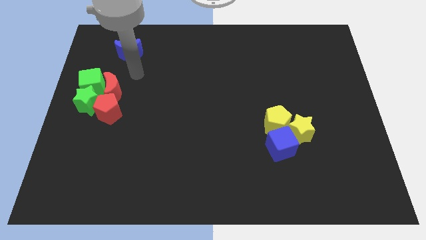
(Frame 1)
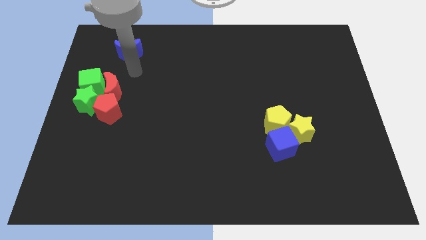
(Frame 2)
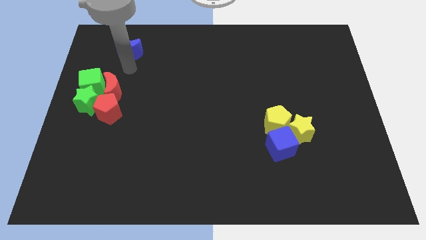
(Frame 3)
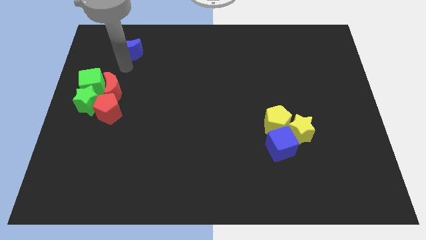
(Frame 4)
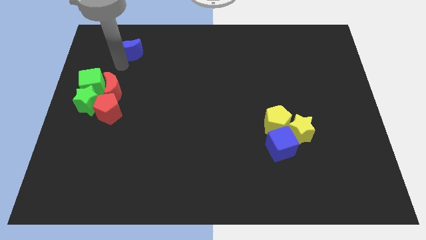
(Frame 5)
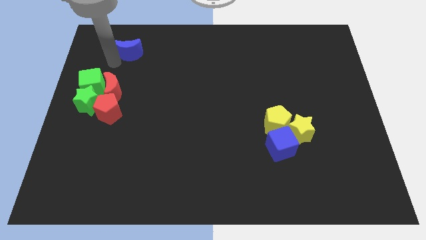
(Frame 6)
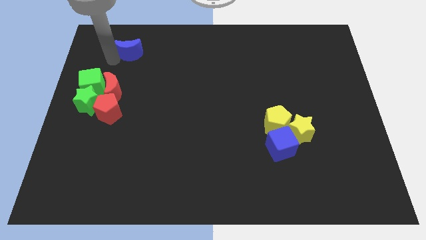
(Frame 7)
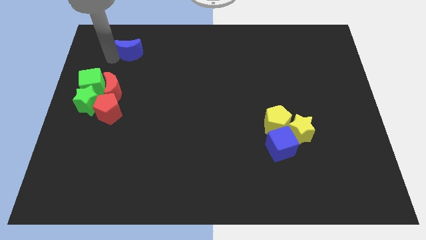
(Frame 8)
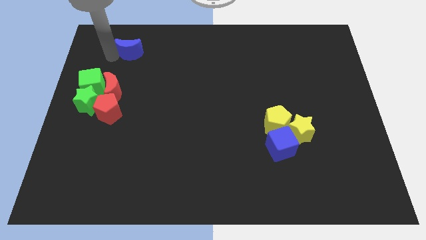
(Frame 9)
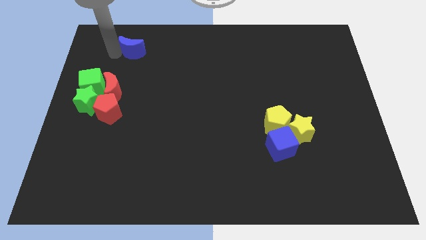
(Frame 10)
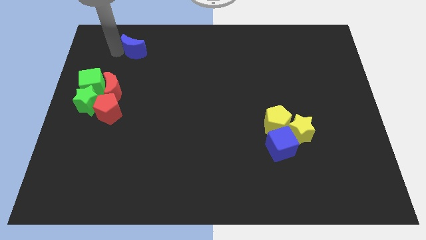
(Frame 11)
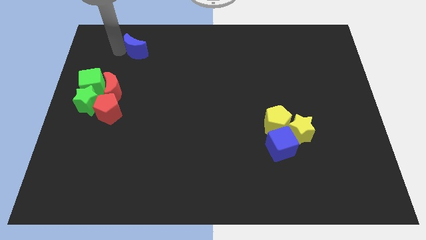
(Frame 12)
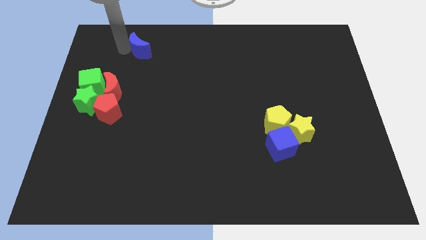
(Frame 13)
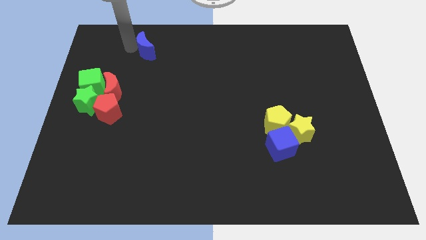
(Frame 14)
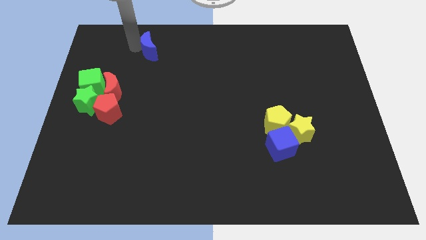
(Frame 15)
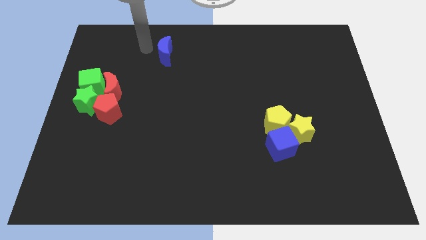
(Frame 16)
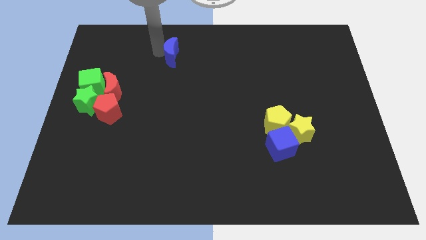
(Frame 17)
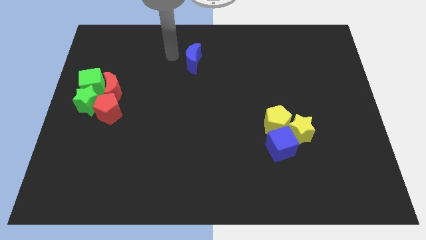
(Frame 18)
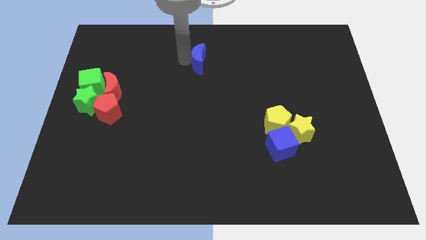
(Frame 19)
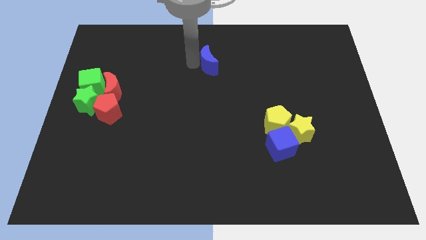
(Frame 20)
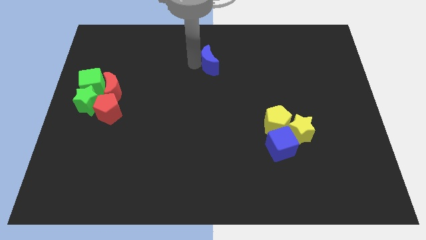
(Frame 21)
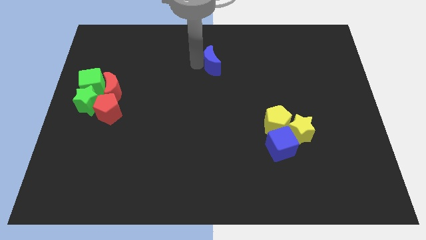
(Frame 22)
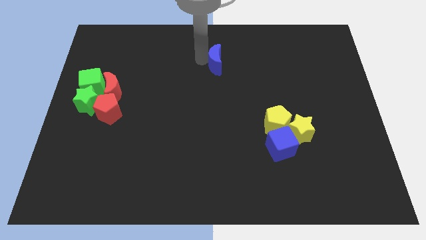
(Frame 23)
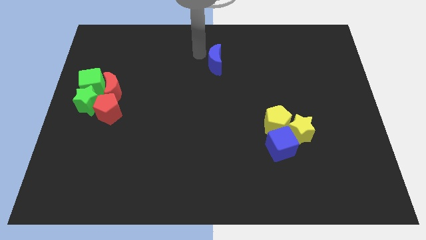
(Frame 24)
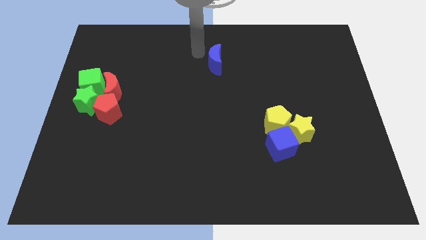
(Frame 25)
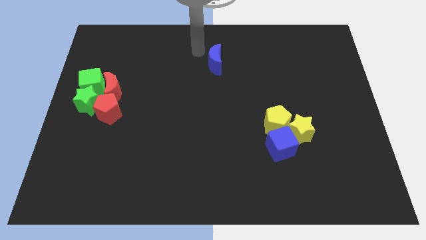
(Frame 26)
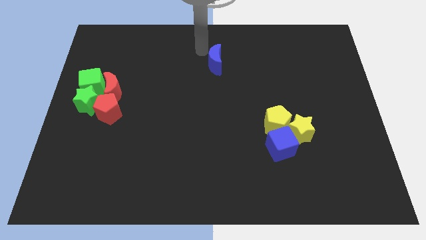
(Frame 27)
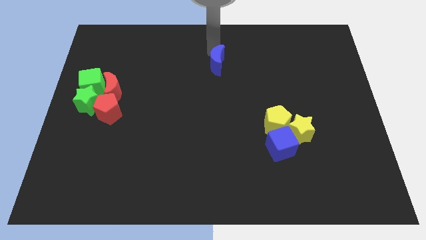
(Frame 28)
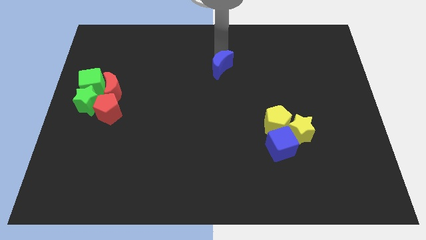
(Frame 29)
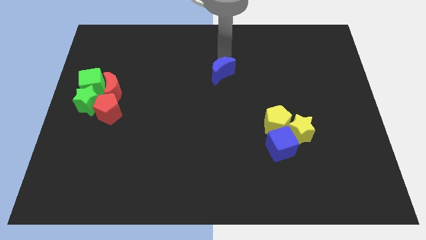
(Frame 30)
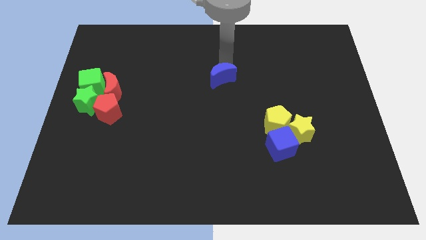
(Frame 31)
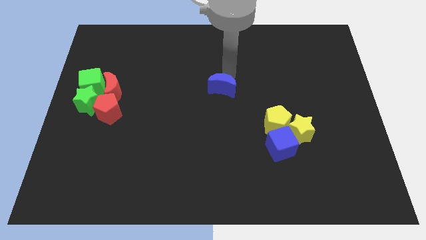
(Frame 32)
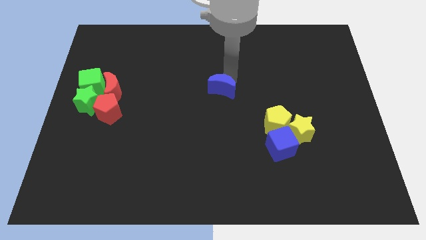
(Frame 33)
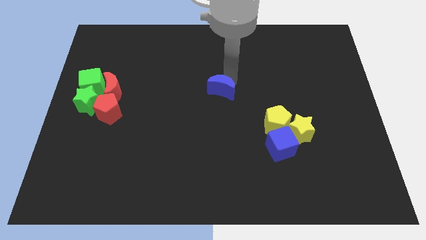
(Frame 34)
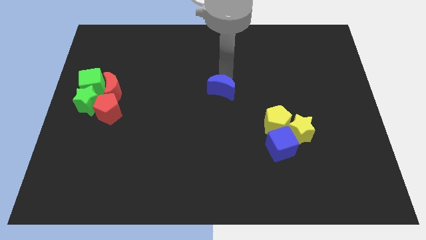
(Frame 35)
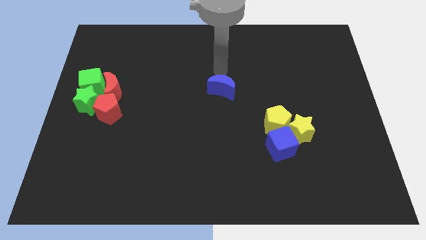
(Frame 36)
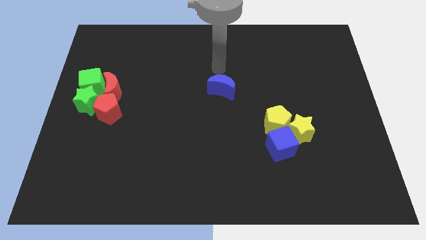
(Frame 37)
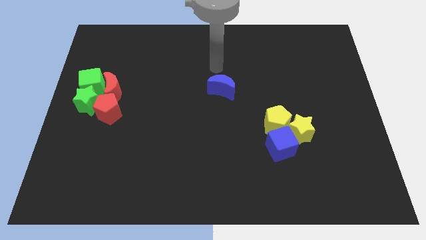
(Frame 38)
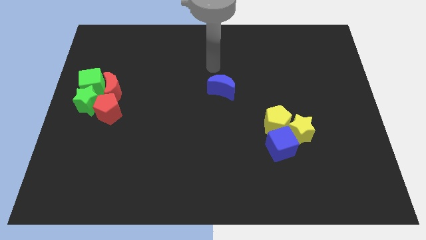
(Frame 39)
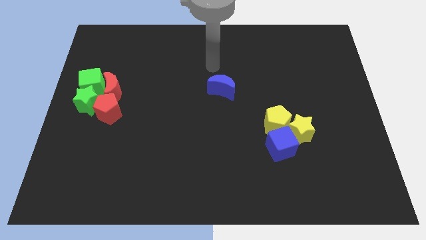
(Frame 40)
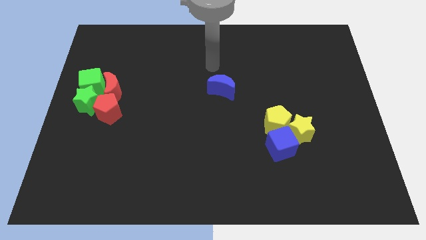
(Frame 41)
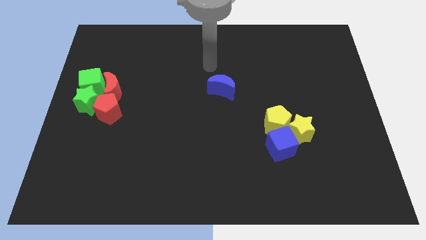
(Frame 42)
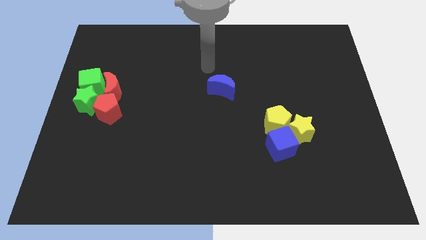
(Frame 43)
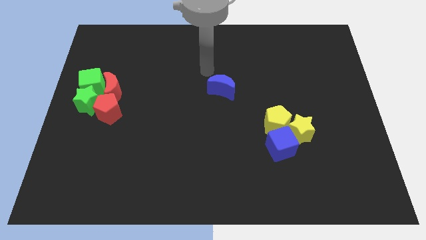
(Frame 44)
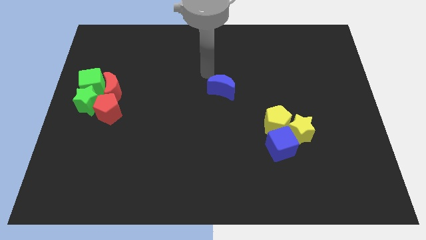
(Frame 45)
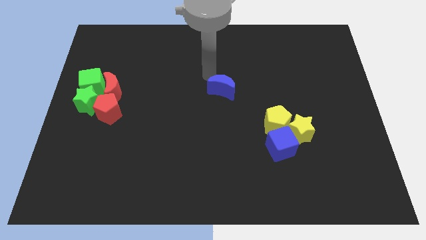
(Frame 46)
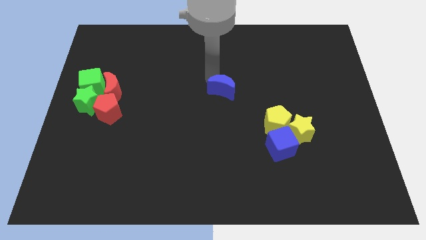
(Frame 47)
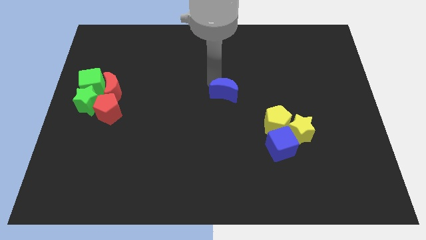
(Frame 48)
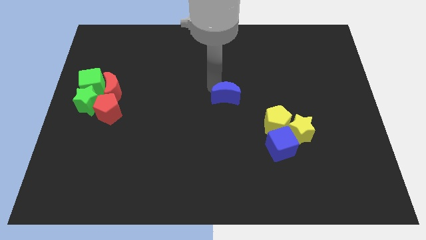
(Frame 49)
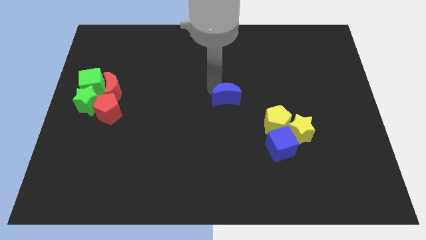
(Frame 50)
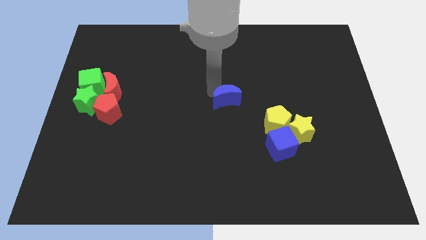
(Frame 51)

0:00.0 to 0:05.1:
place the blue crescent to the right of the red crescent

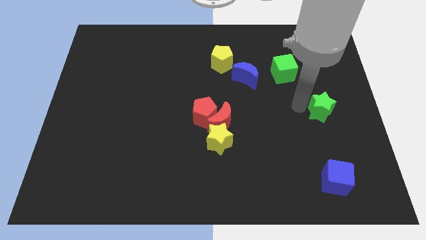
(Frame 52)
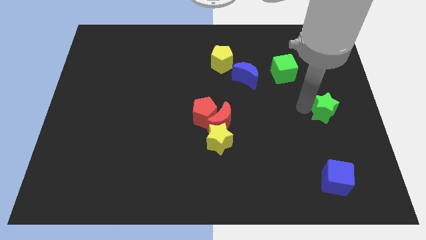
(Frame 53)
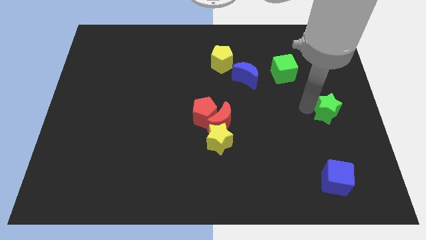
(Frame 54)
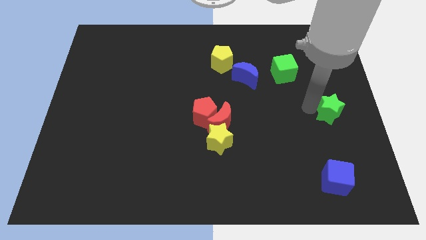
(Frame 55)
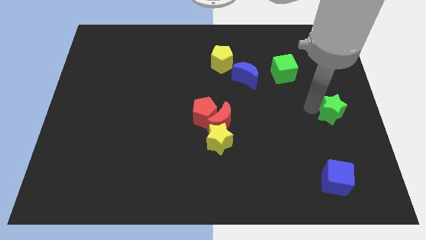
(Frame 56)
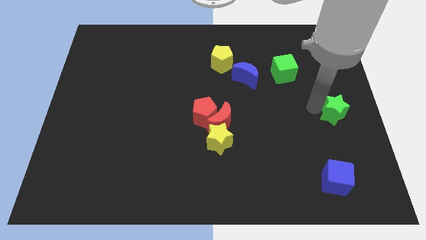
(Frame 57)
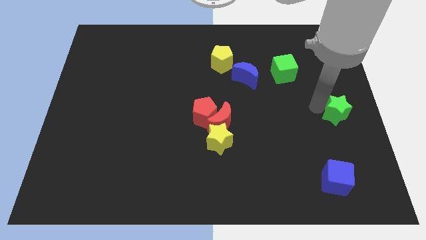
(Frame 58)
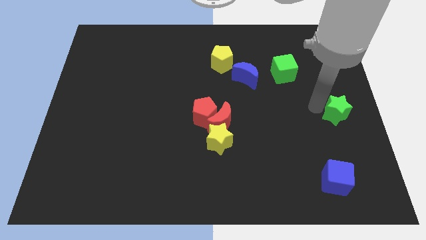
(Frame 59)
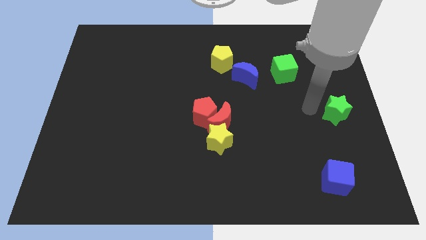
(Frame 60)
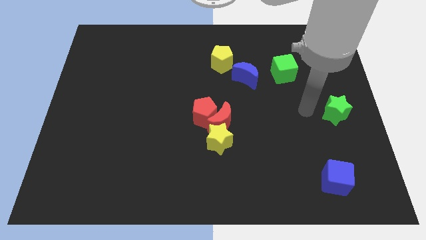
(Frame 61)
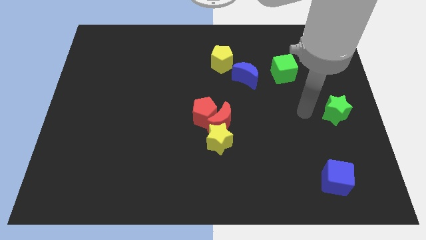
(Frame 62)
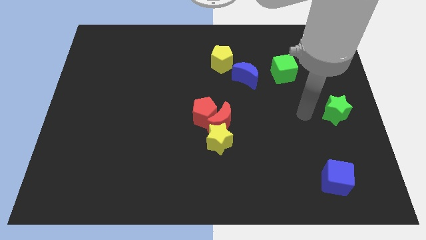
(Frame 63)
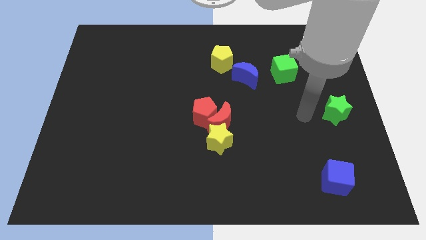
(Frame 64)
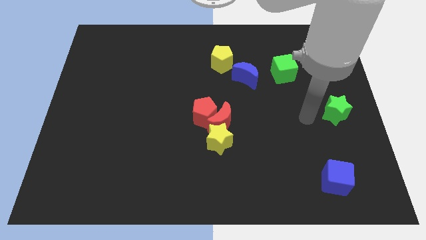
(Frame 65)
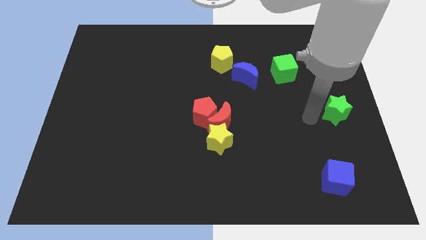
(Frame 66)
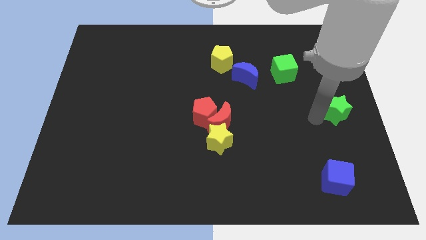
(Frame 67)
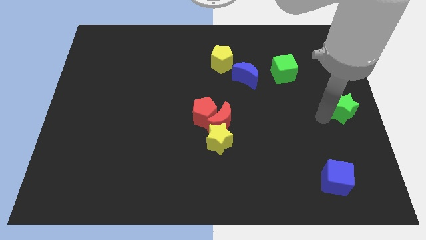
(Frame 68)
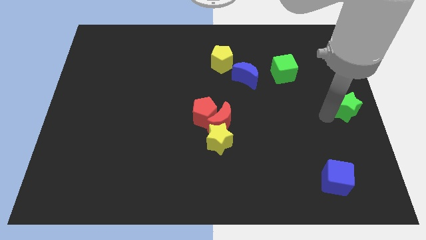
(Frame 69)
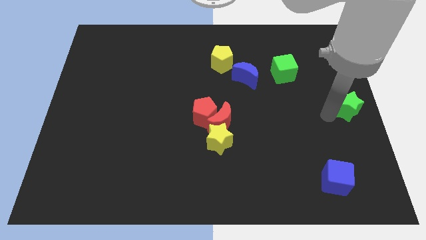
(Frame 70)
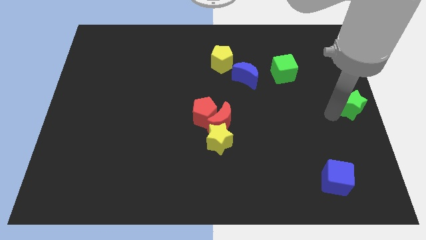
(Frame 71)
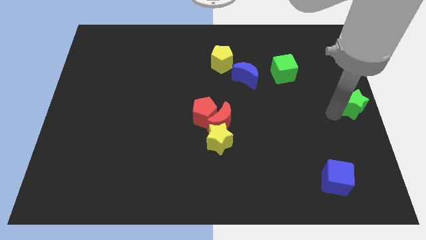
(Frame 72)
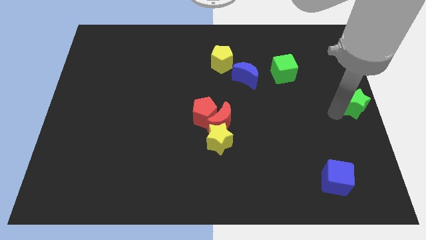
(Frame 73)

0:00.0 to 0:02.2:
put the green star to the center right side corner

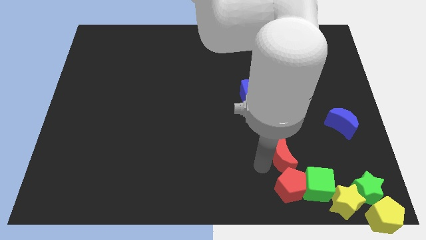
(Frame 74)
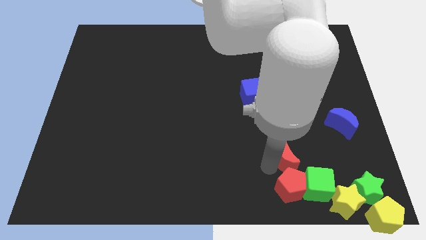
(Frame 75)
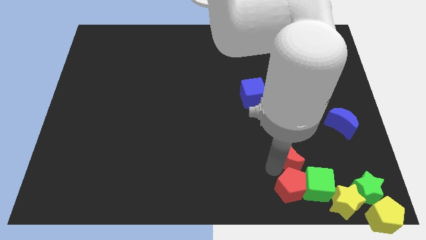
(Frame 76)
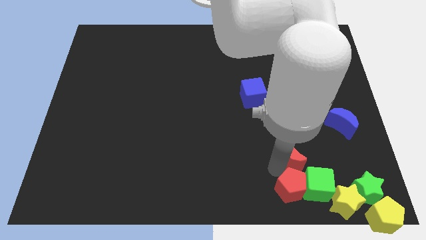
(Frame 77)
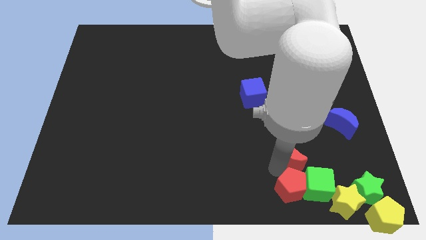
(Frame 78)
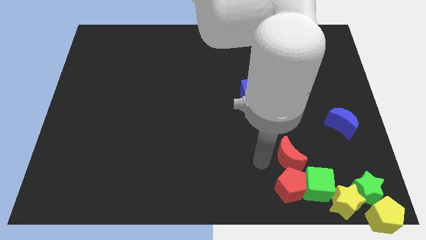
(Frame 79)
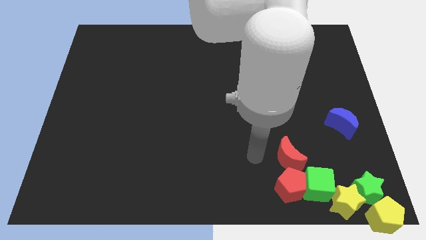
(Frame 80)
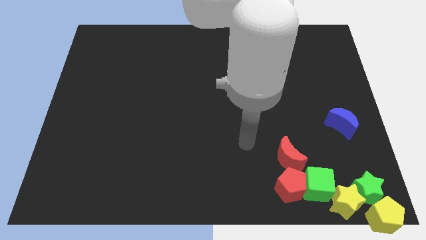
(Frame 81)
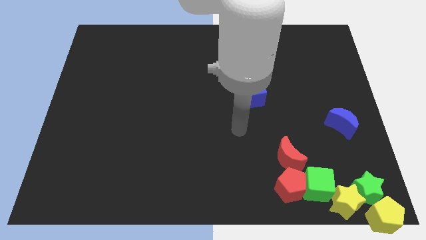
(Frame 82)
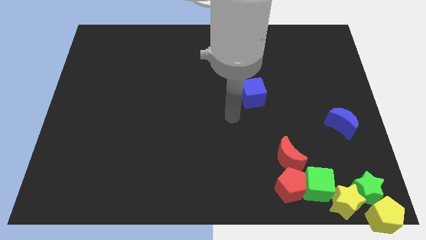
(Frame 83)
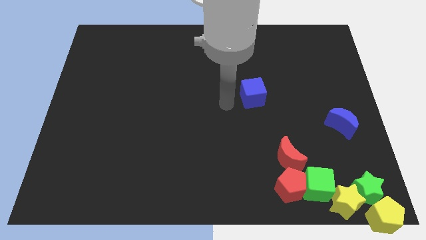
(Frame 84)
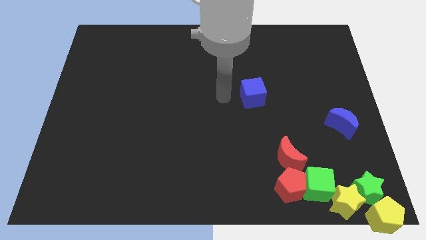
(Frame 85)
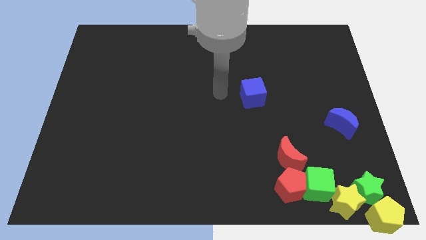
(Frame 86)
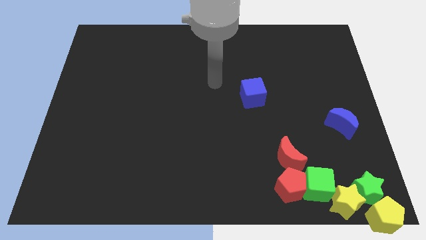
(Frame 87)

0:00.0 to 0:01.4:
place red moon above the red pentagon
